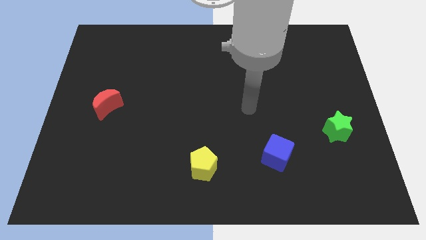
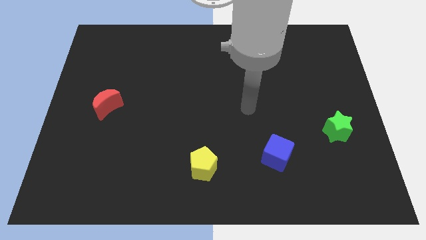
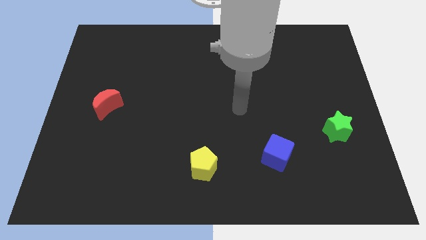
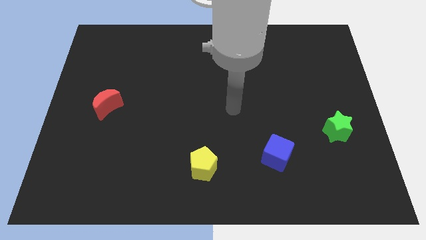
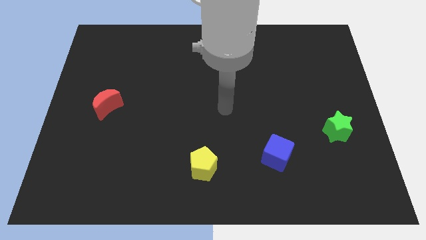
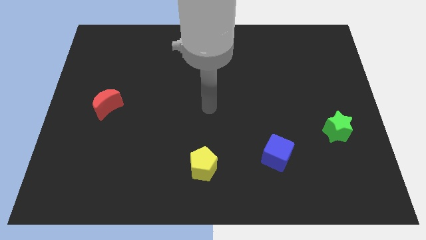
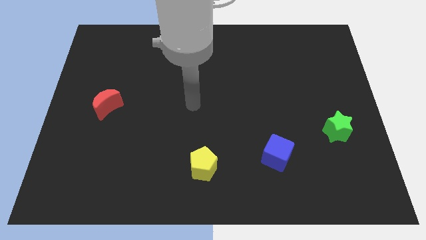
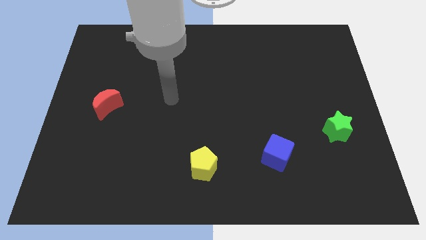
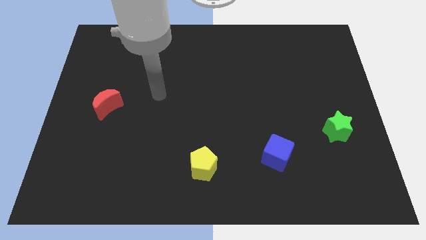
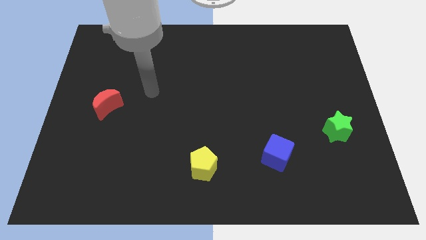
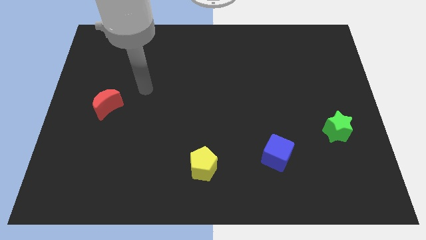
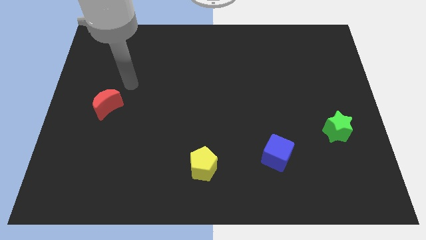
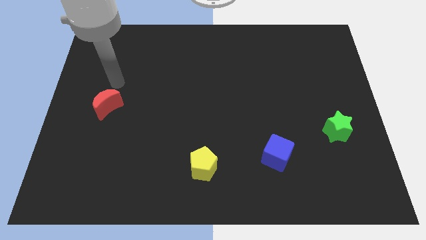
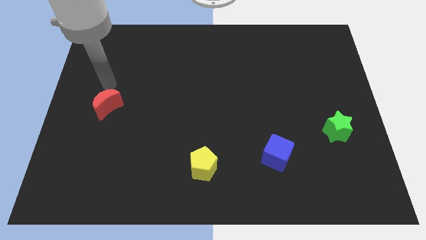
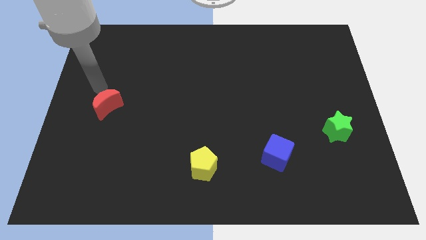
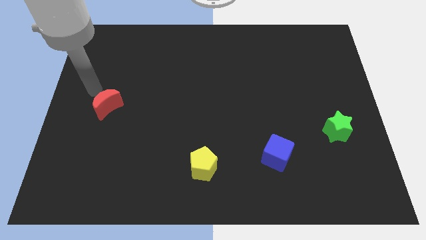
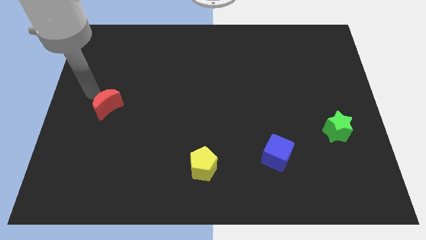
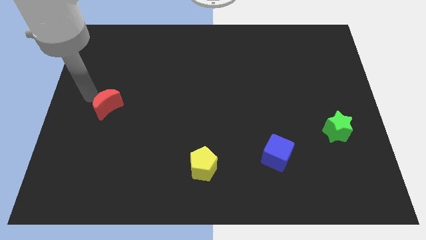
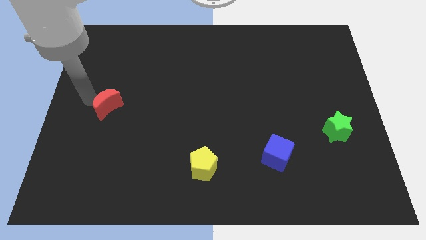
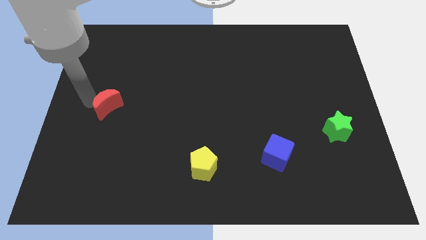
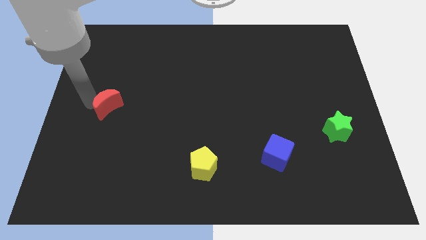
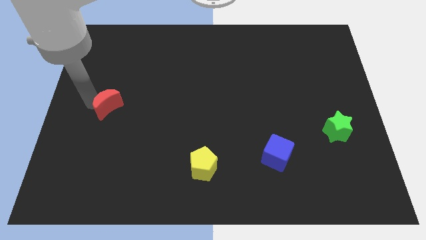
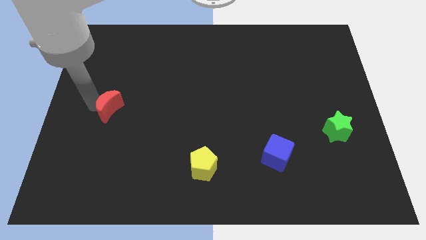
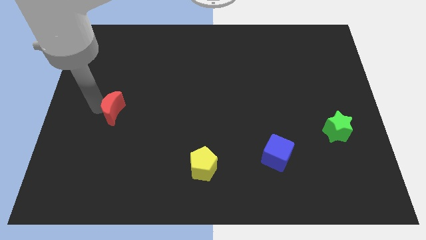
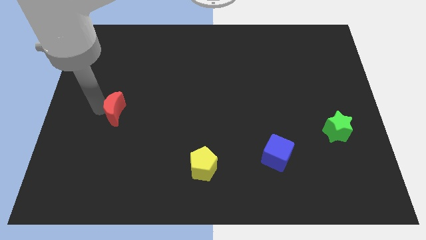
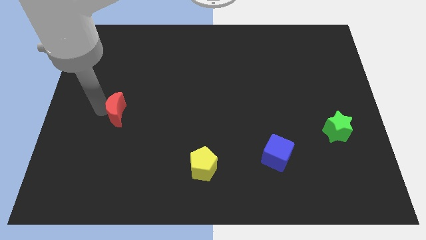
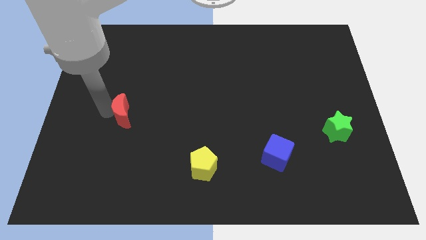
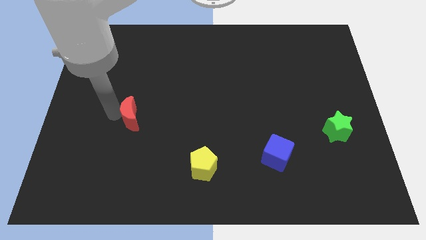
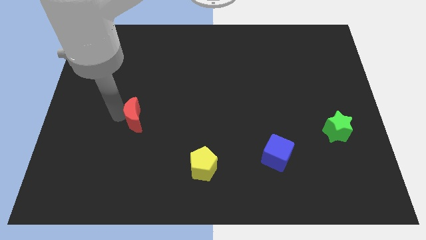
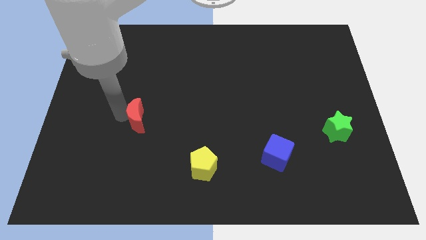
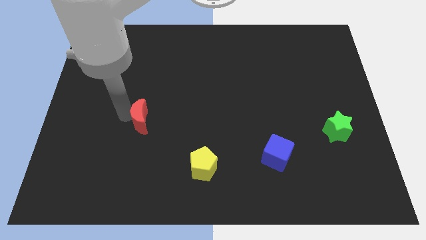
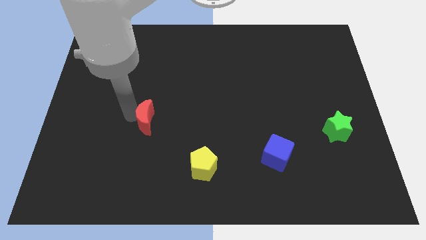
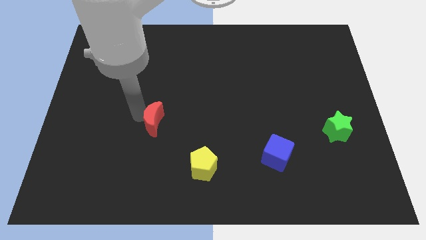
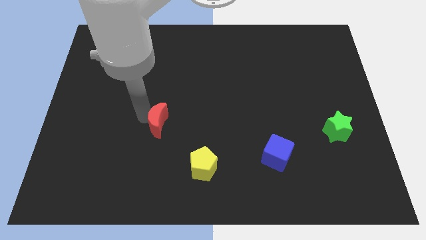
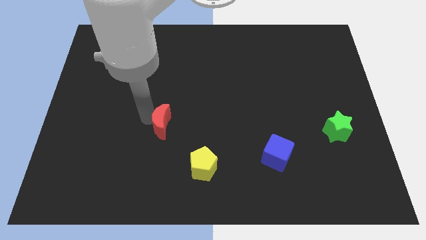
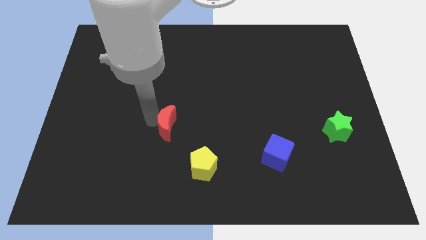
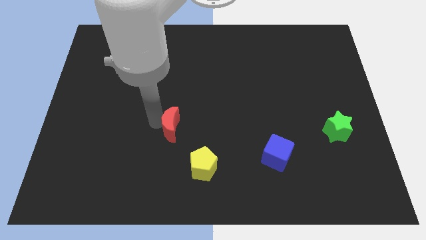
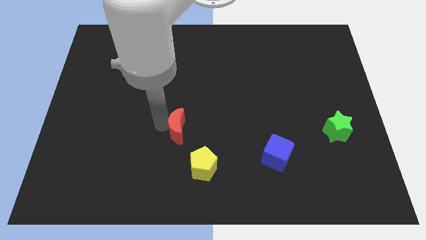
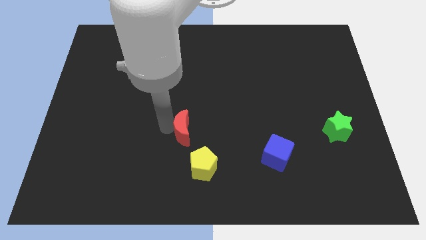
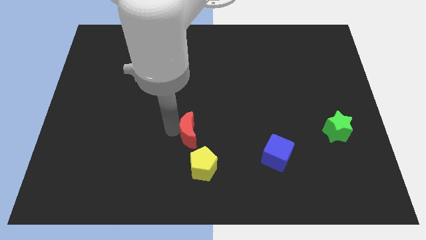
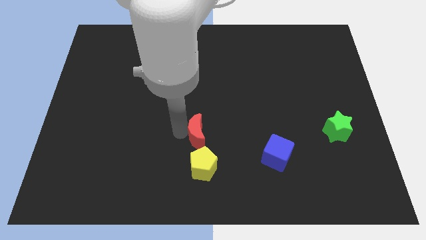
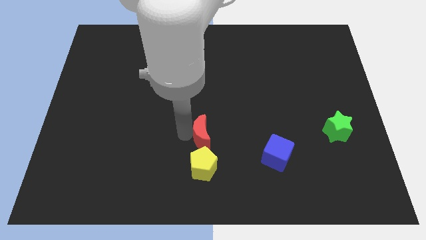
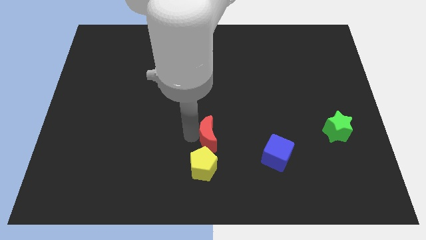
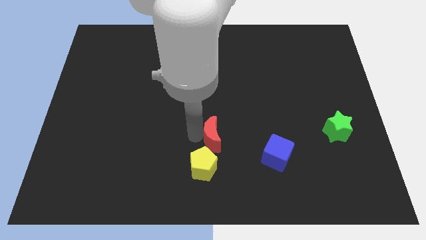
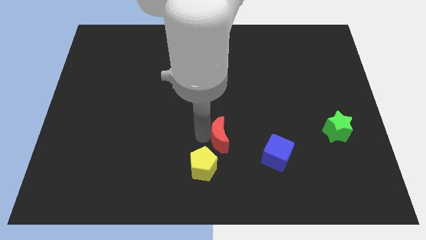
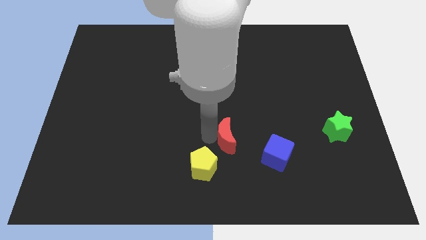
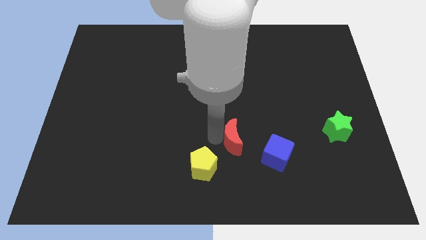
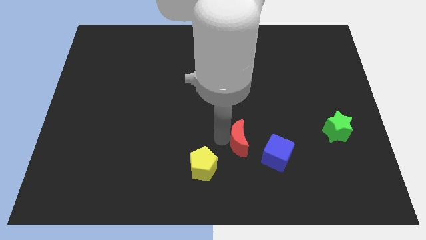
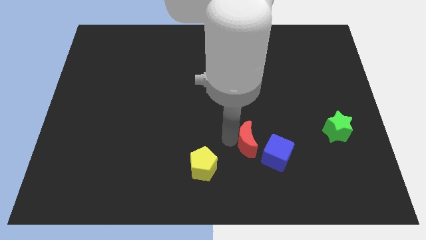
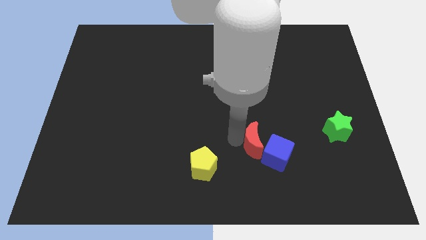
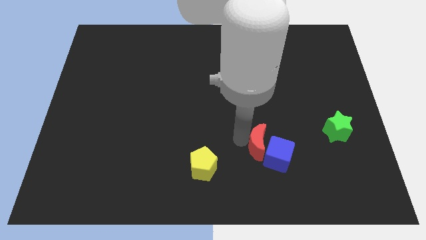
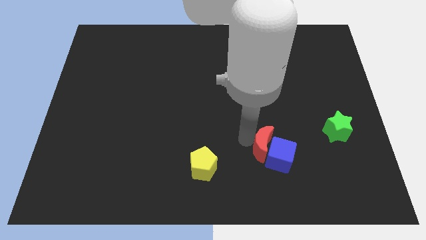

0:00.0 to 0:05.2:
slide the red block next to the blue block

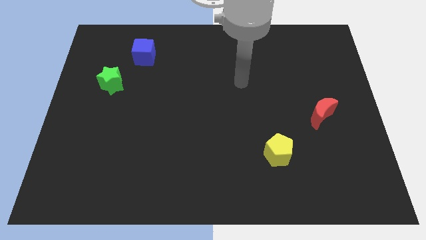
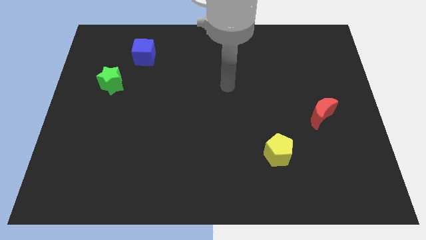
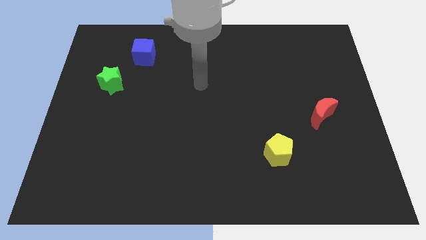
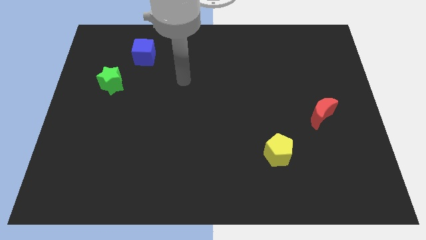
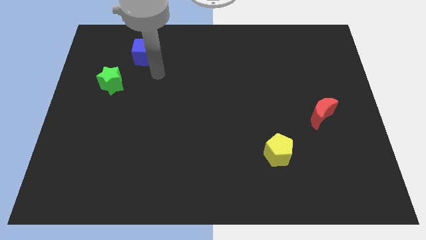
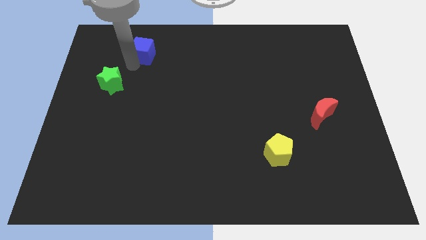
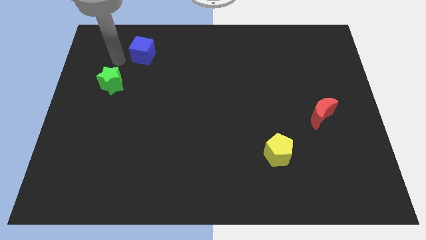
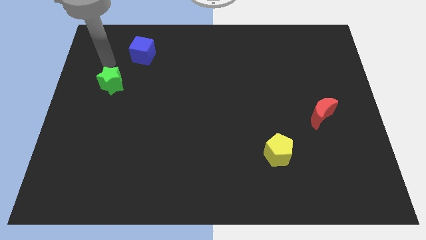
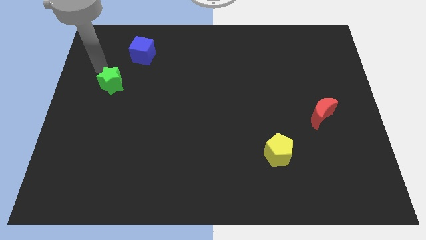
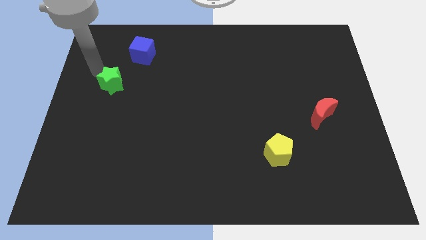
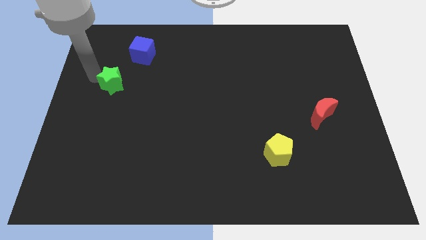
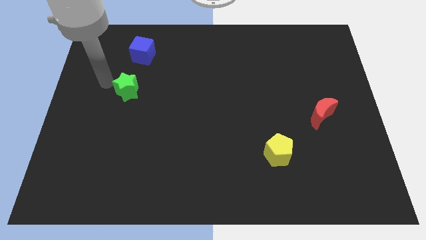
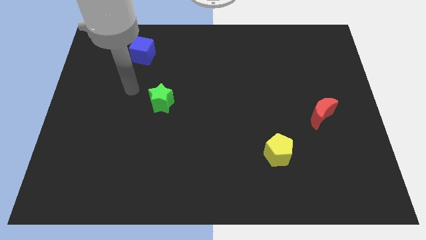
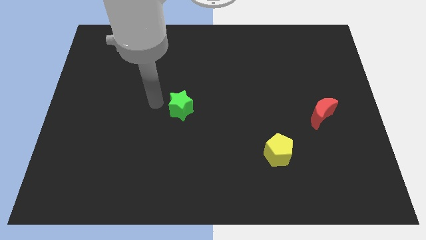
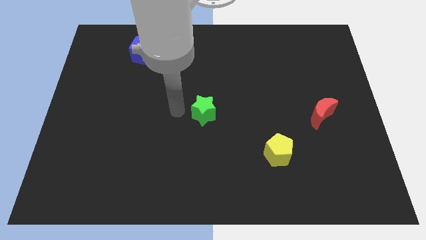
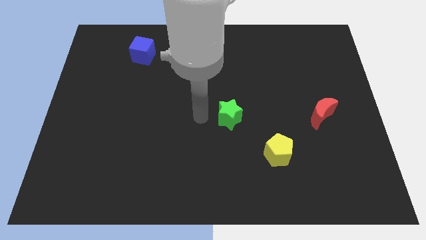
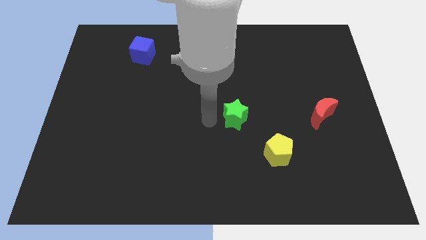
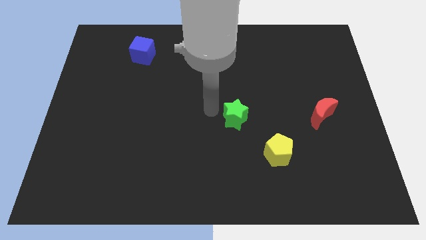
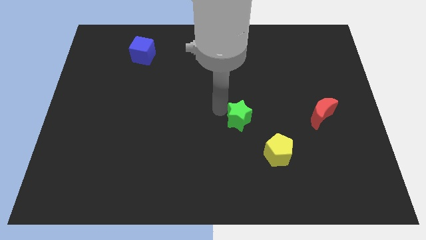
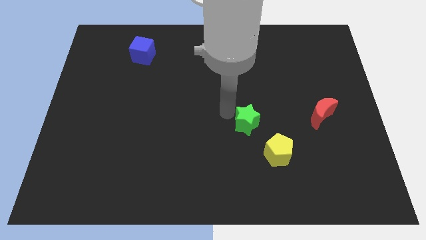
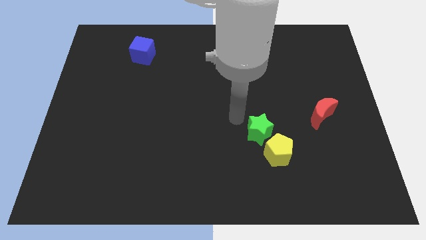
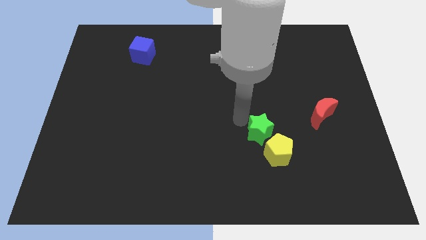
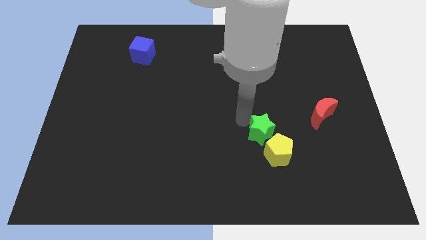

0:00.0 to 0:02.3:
push the green star to the pentagon

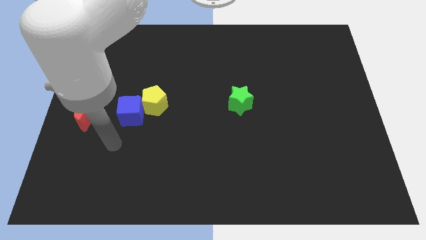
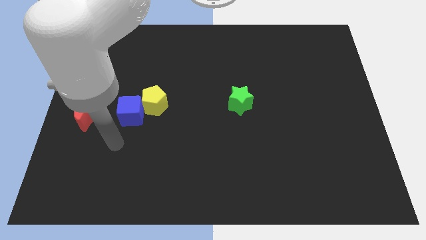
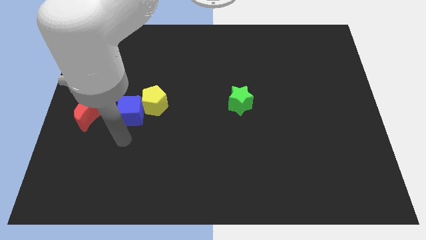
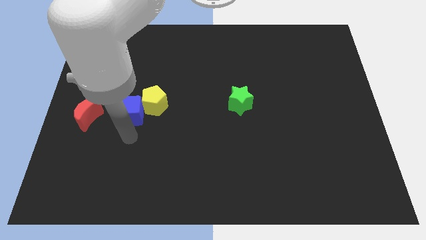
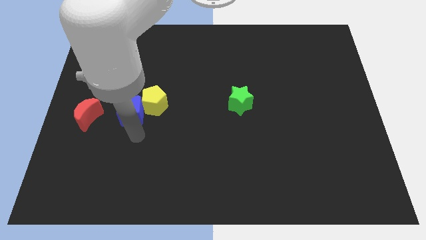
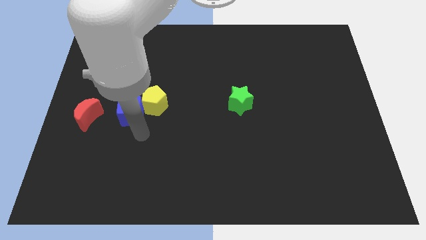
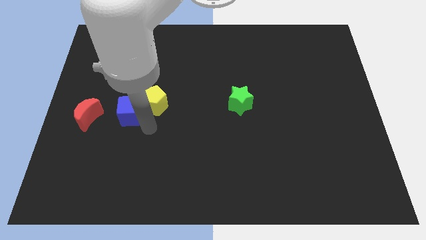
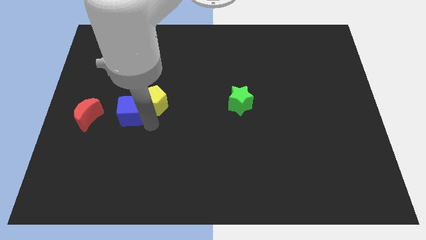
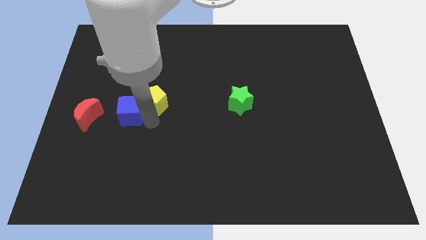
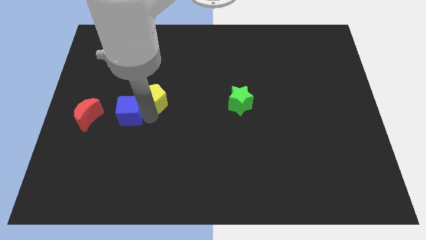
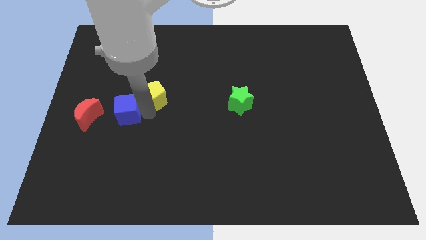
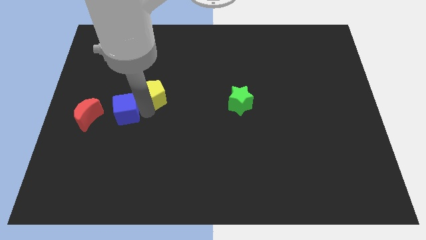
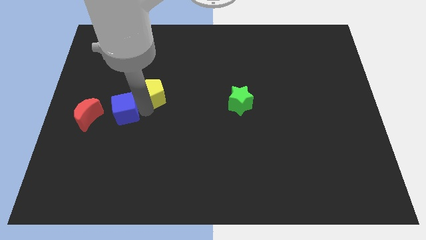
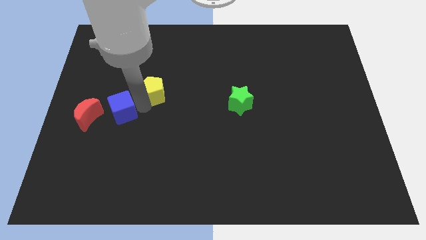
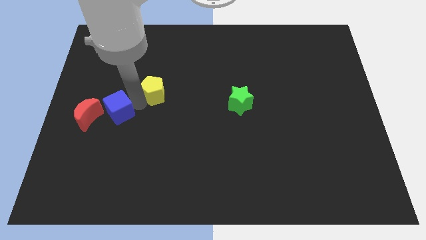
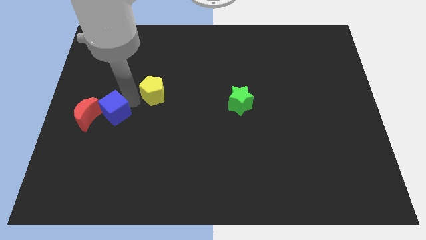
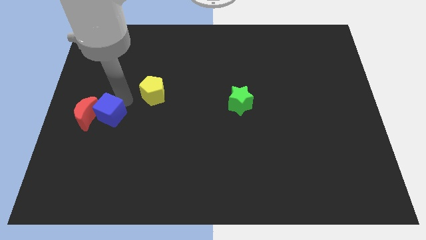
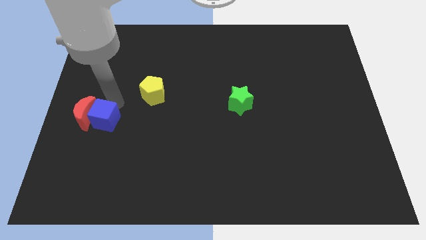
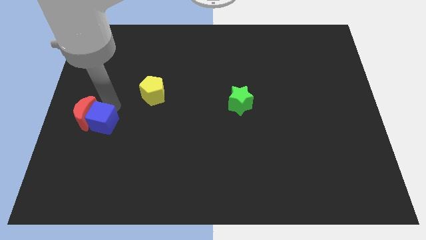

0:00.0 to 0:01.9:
put the cube to the moon
